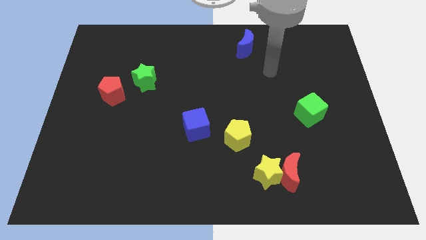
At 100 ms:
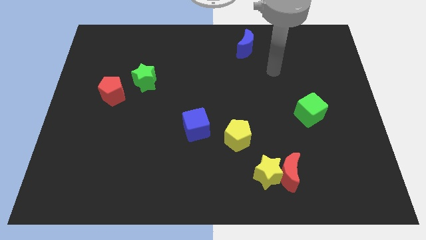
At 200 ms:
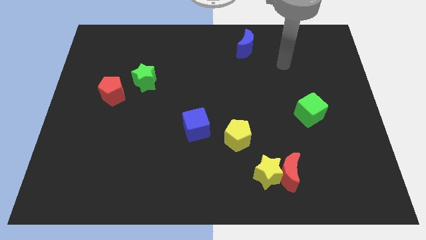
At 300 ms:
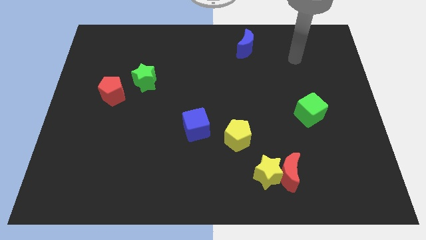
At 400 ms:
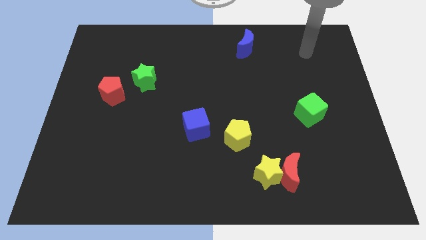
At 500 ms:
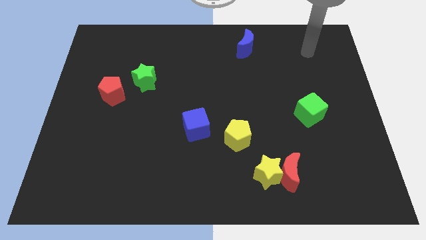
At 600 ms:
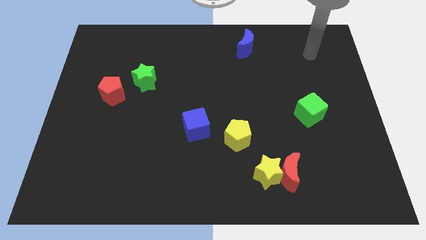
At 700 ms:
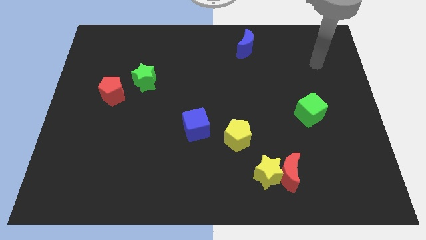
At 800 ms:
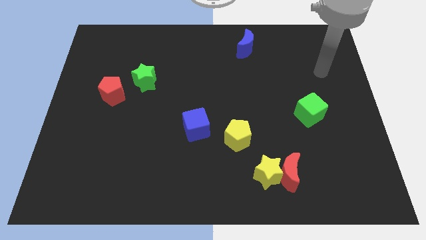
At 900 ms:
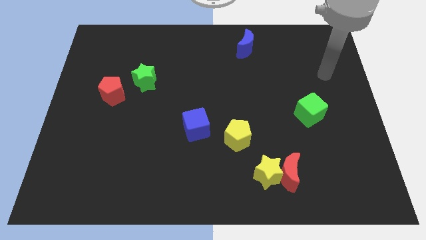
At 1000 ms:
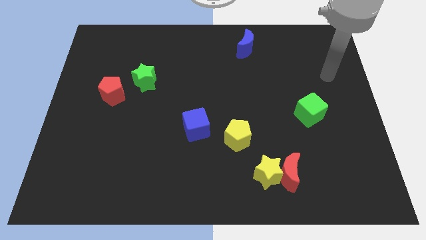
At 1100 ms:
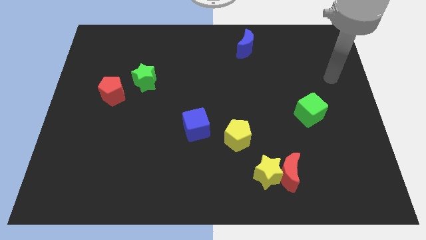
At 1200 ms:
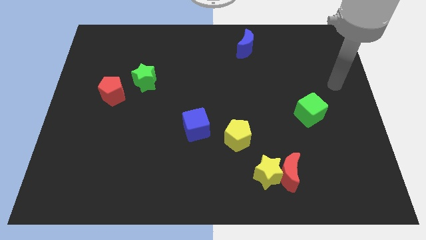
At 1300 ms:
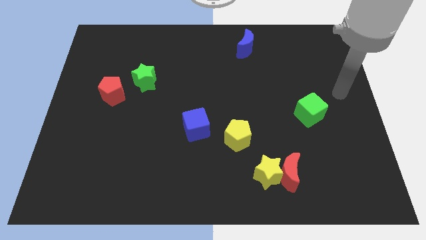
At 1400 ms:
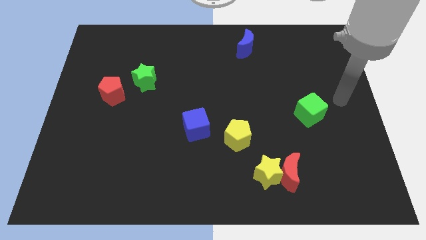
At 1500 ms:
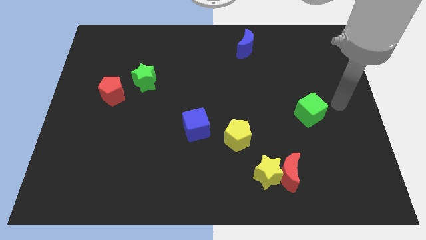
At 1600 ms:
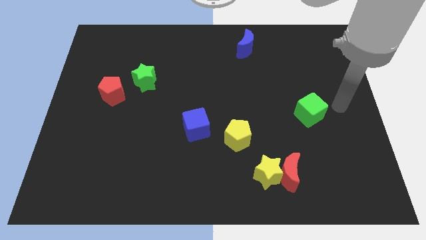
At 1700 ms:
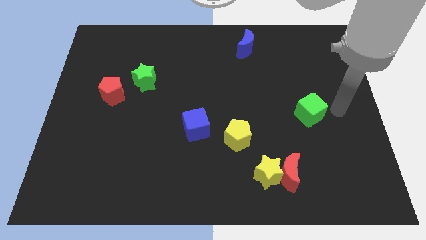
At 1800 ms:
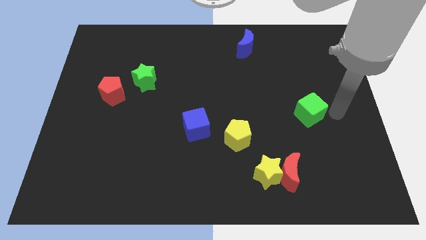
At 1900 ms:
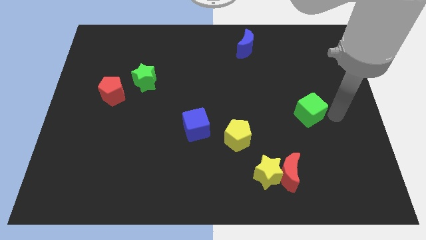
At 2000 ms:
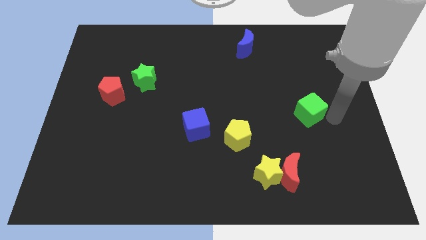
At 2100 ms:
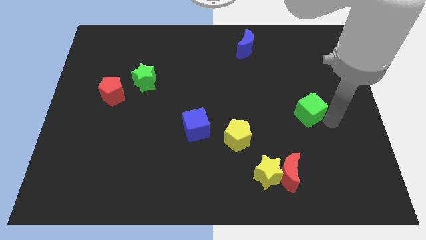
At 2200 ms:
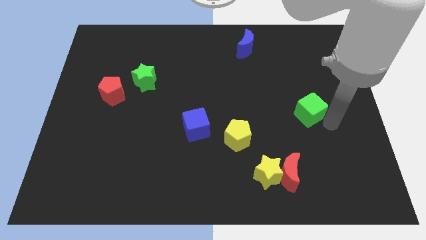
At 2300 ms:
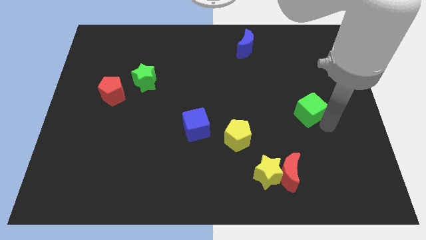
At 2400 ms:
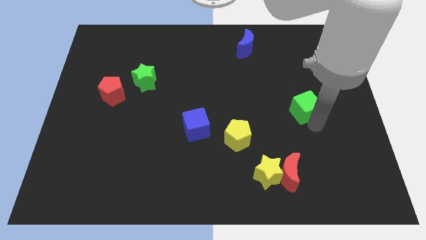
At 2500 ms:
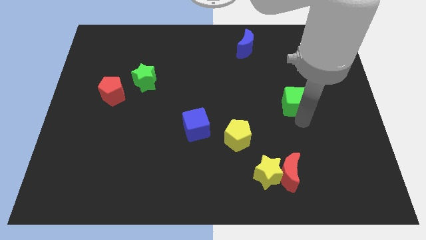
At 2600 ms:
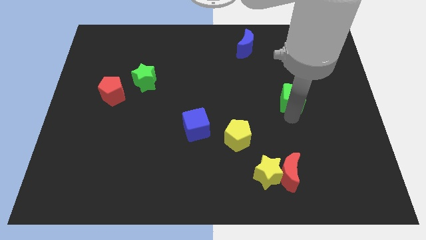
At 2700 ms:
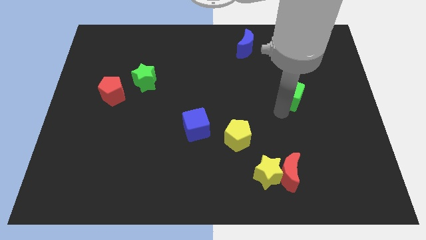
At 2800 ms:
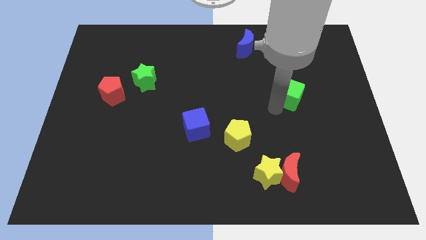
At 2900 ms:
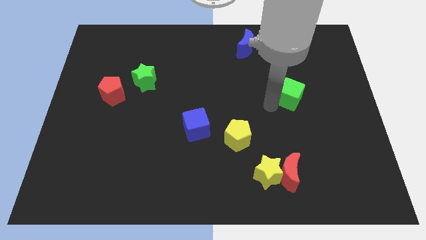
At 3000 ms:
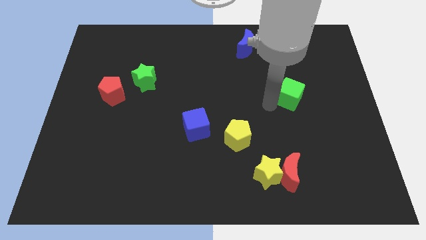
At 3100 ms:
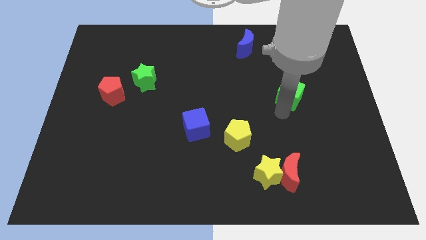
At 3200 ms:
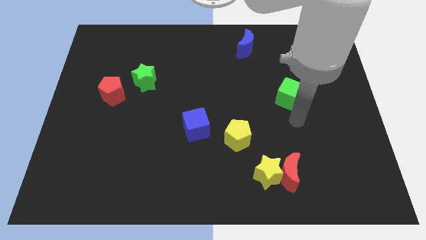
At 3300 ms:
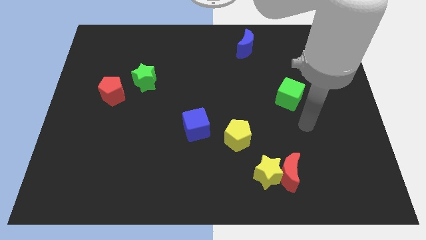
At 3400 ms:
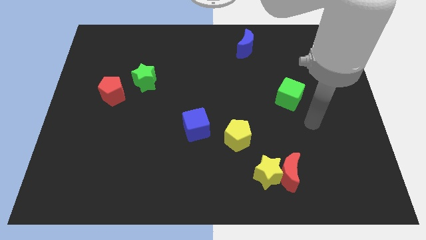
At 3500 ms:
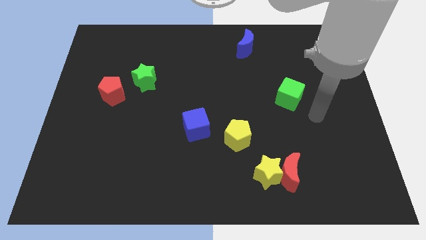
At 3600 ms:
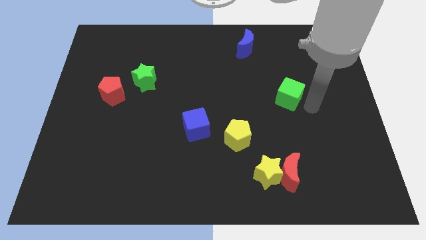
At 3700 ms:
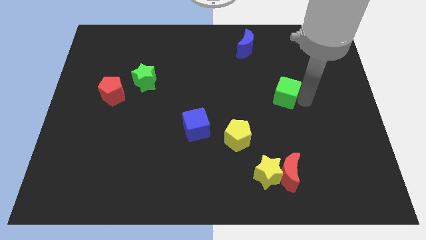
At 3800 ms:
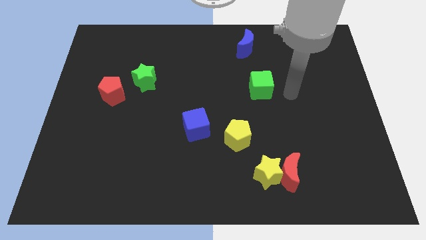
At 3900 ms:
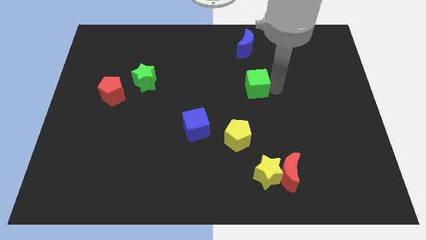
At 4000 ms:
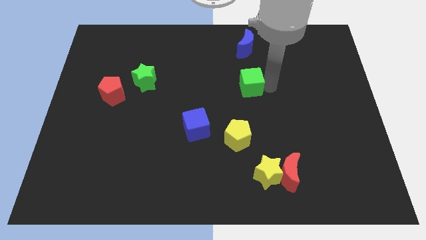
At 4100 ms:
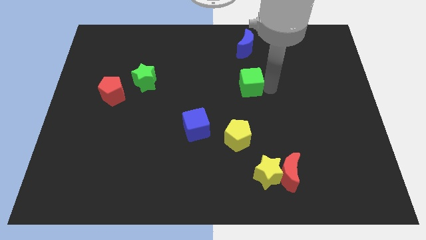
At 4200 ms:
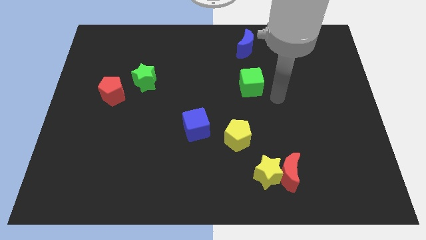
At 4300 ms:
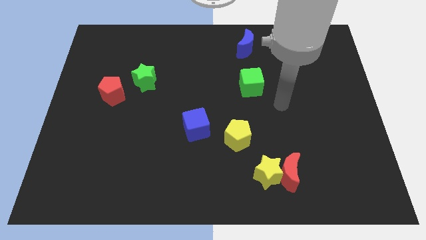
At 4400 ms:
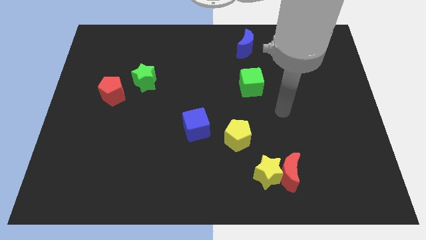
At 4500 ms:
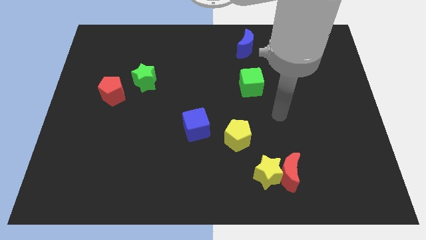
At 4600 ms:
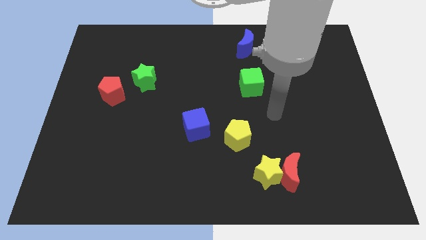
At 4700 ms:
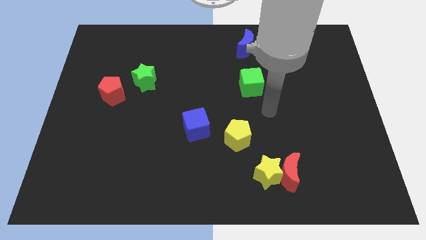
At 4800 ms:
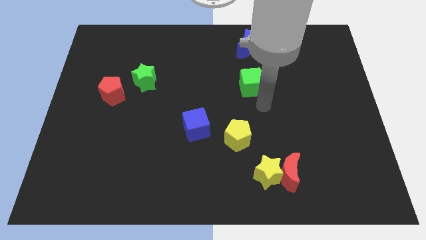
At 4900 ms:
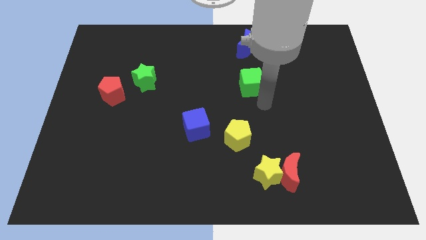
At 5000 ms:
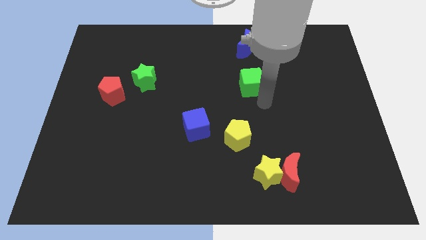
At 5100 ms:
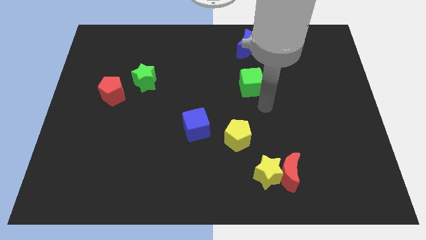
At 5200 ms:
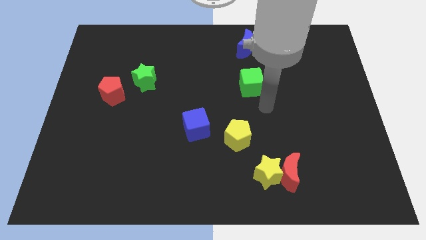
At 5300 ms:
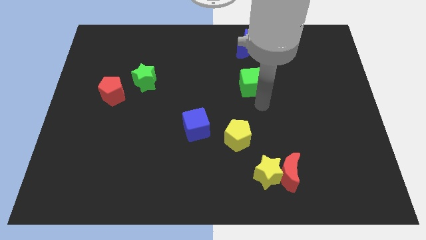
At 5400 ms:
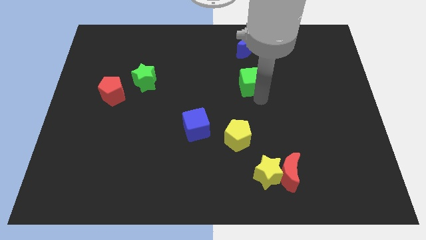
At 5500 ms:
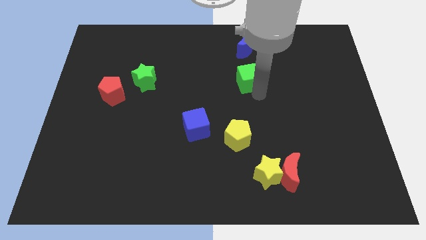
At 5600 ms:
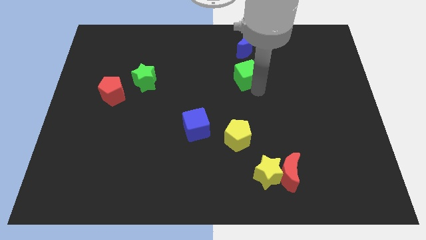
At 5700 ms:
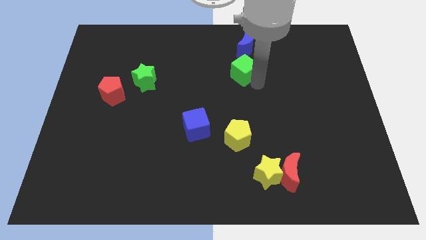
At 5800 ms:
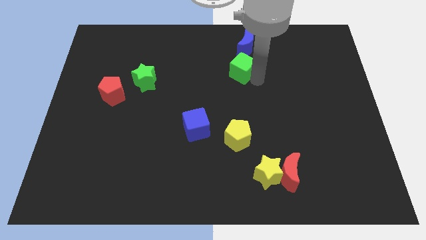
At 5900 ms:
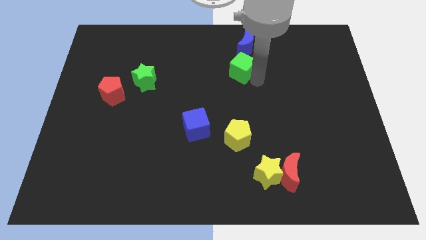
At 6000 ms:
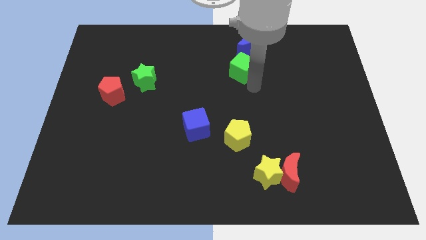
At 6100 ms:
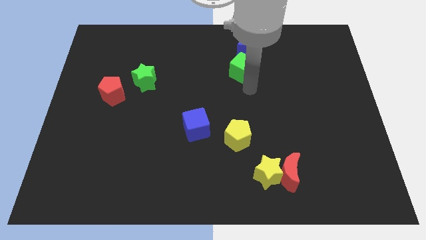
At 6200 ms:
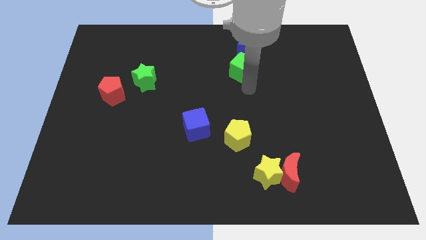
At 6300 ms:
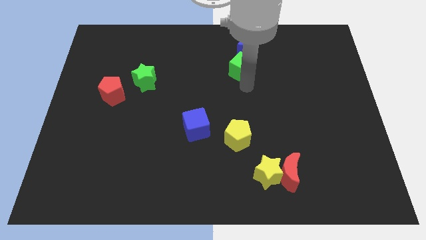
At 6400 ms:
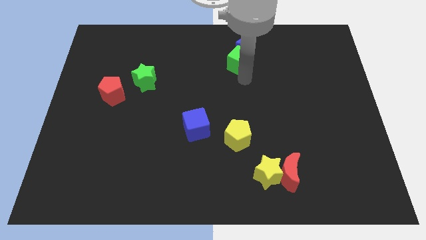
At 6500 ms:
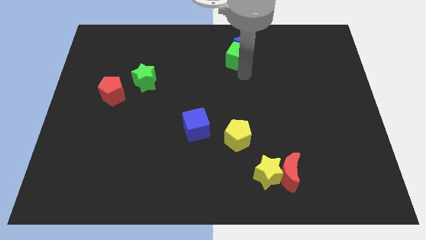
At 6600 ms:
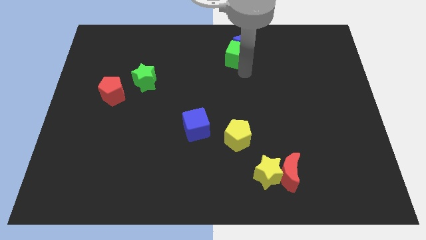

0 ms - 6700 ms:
push the green cube into the blue moon

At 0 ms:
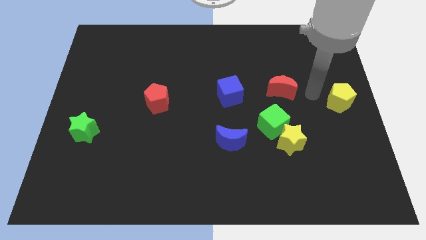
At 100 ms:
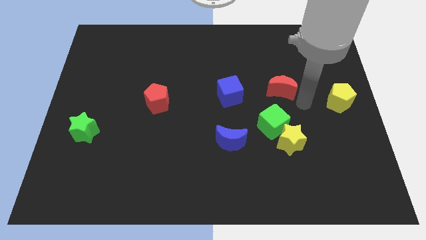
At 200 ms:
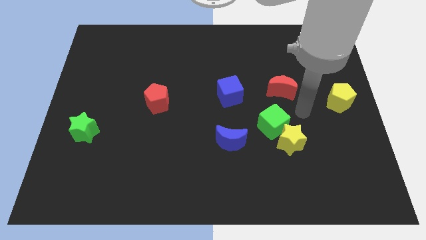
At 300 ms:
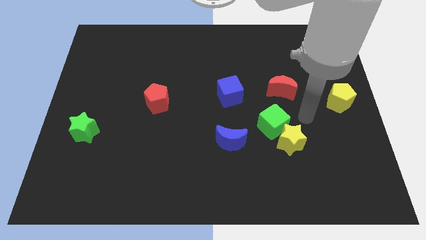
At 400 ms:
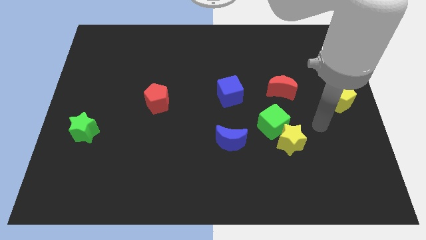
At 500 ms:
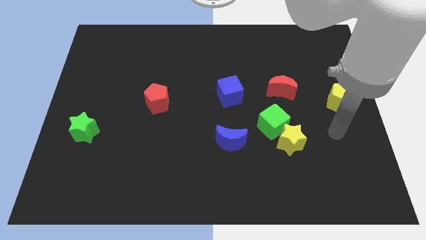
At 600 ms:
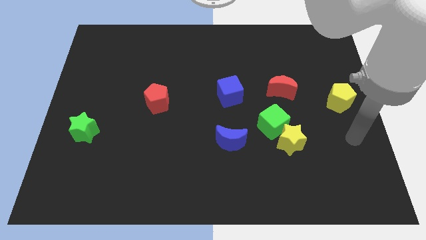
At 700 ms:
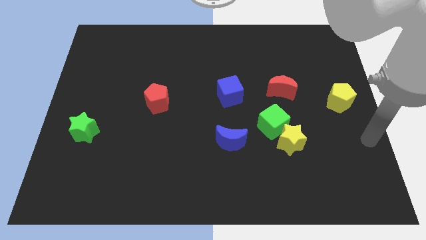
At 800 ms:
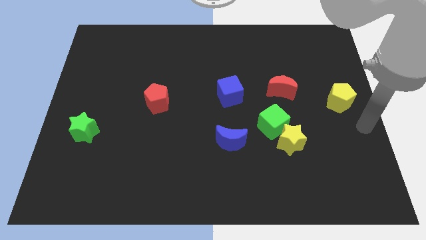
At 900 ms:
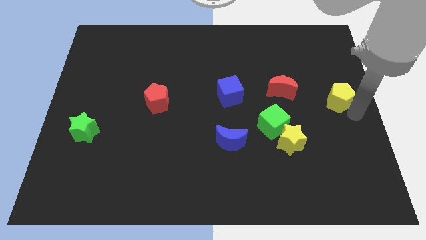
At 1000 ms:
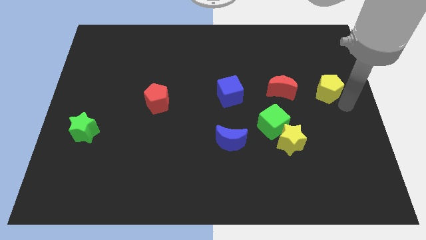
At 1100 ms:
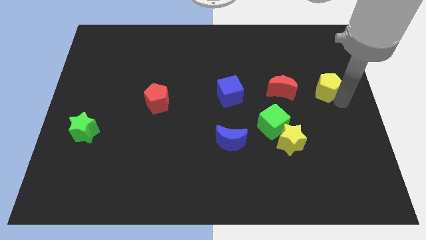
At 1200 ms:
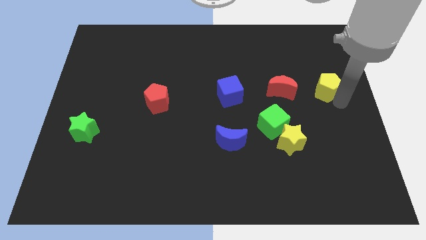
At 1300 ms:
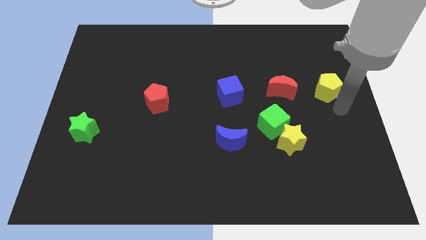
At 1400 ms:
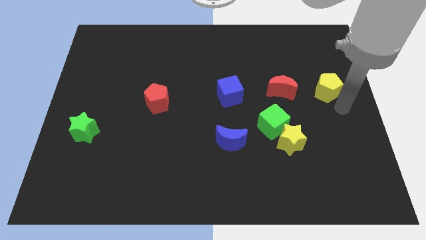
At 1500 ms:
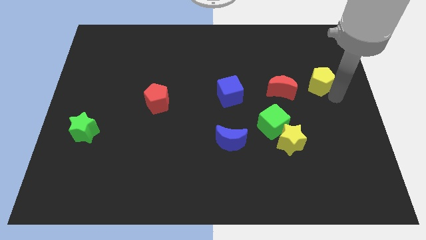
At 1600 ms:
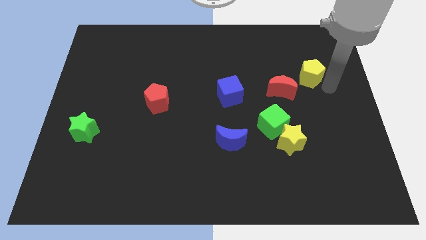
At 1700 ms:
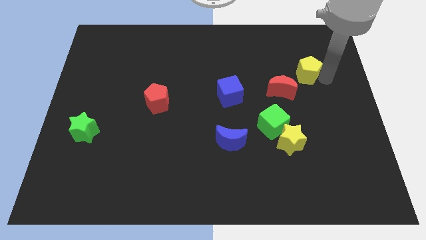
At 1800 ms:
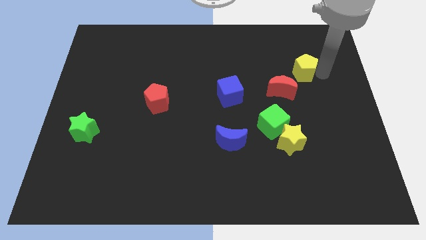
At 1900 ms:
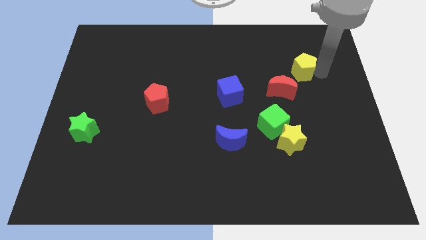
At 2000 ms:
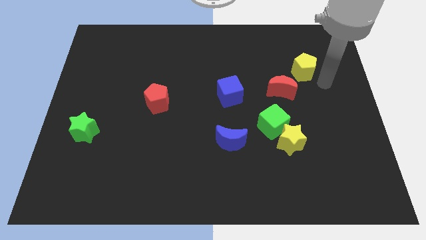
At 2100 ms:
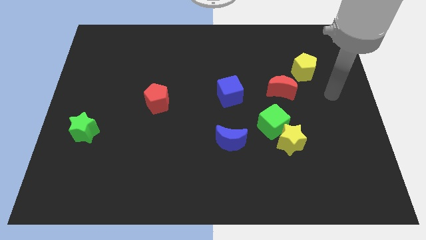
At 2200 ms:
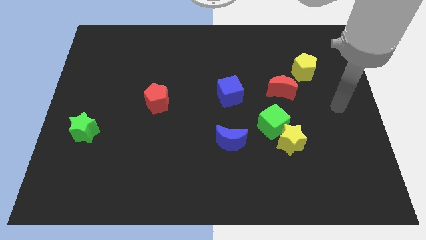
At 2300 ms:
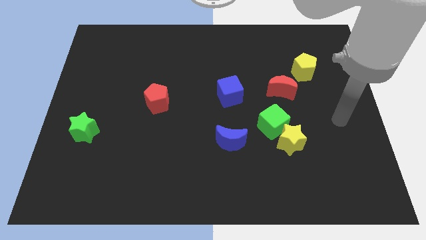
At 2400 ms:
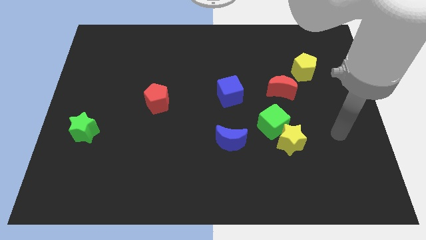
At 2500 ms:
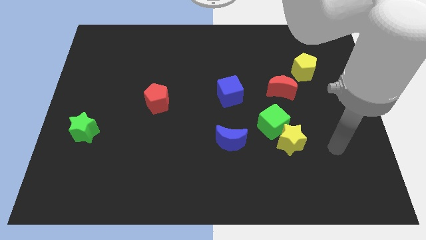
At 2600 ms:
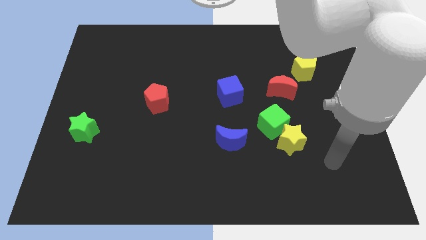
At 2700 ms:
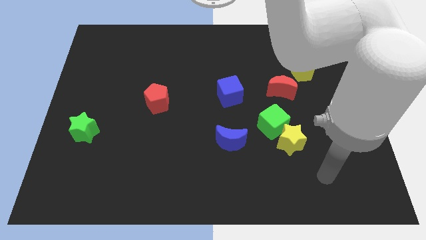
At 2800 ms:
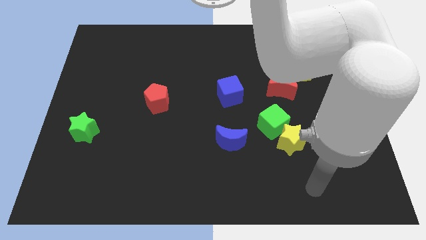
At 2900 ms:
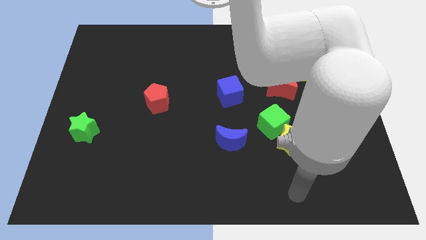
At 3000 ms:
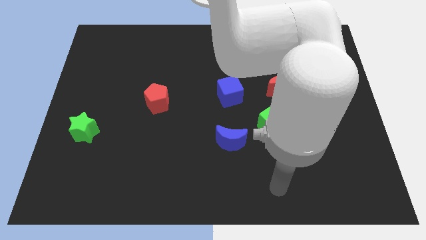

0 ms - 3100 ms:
move the yellow pentagon on top of the red crescent
